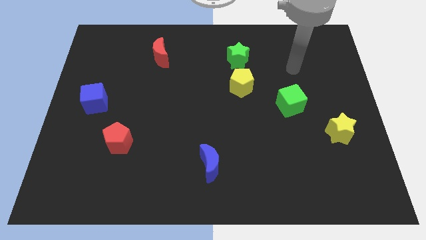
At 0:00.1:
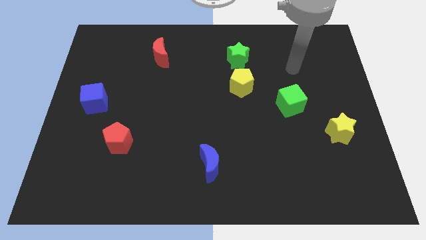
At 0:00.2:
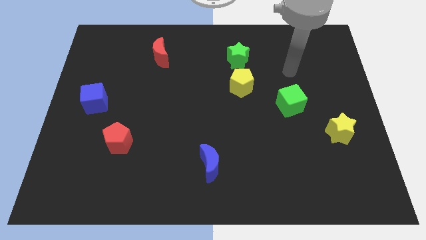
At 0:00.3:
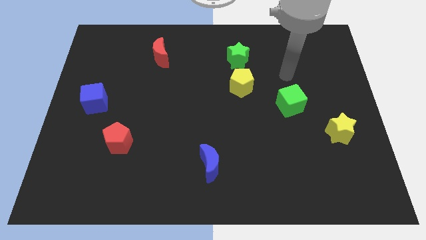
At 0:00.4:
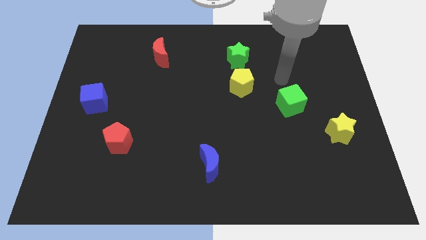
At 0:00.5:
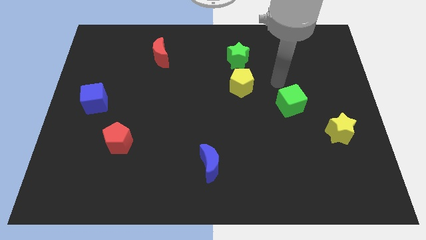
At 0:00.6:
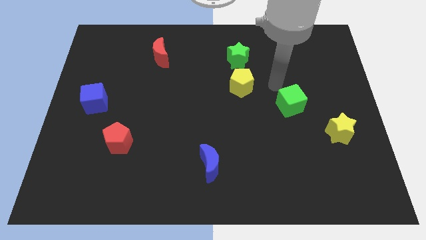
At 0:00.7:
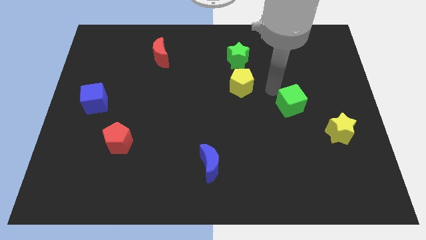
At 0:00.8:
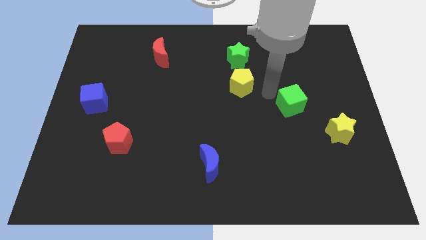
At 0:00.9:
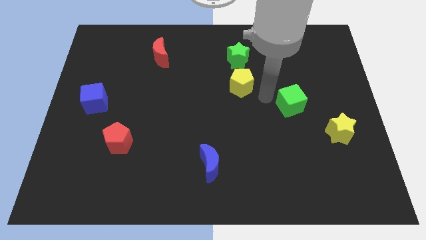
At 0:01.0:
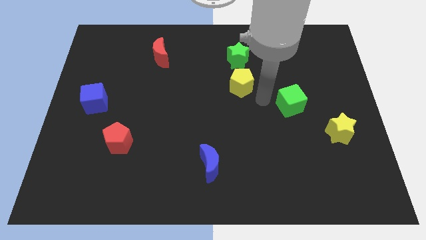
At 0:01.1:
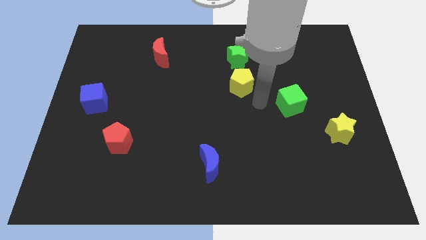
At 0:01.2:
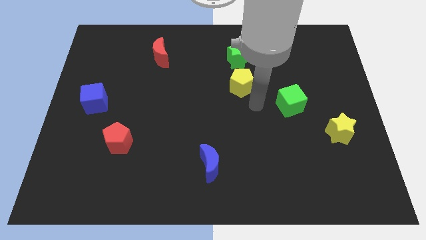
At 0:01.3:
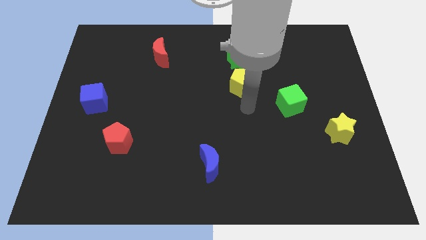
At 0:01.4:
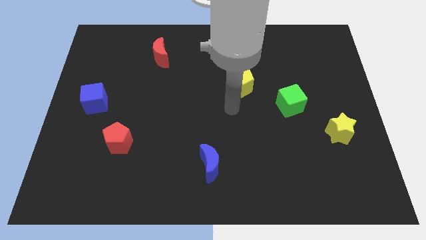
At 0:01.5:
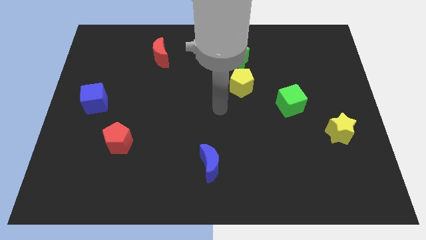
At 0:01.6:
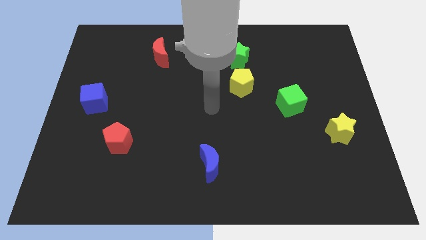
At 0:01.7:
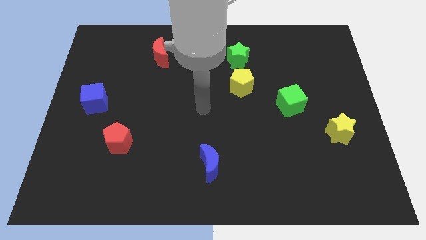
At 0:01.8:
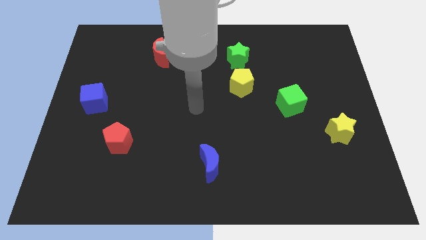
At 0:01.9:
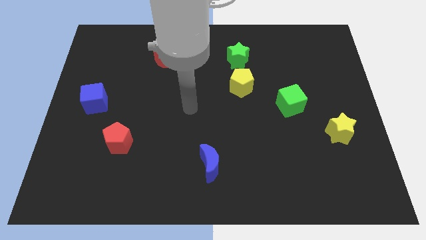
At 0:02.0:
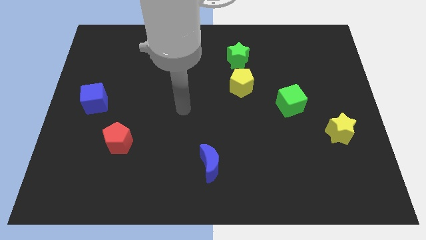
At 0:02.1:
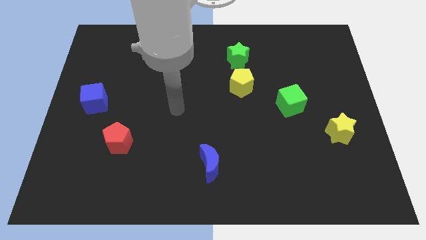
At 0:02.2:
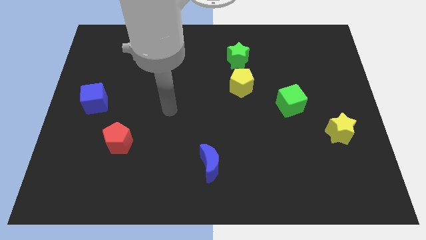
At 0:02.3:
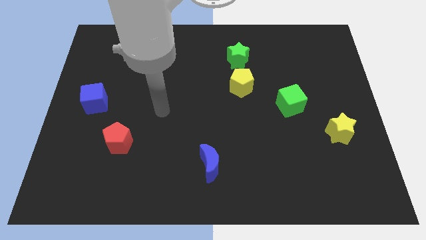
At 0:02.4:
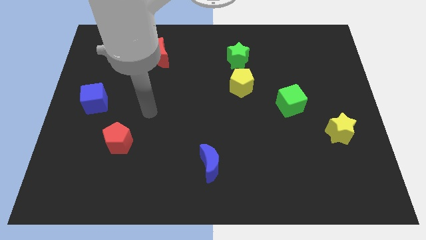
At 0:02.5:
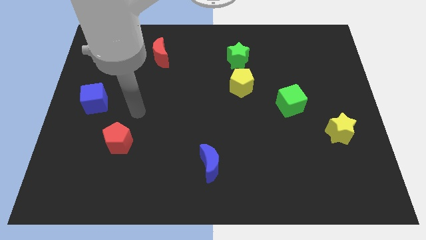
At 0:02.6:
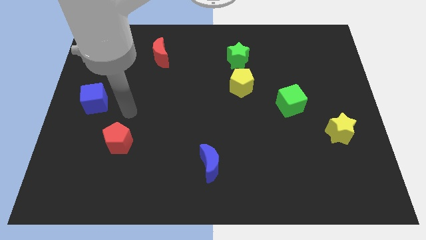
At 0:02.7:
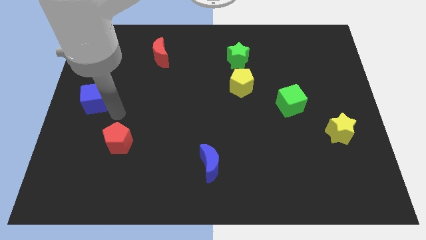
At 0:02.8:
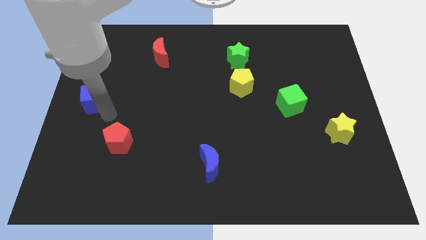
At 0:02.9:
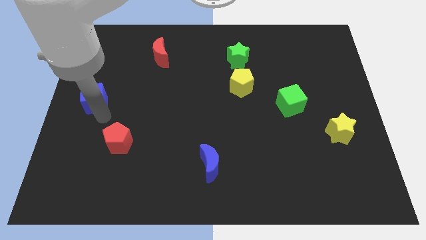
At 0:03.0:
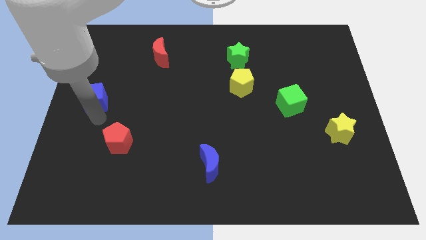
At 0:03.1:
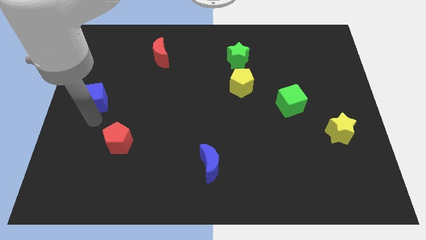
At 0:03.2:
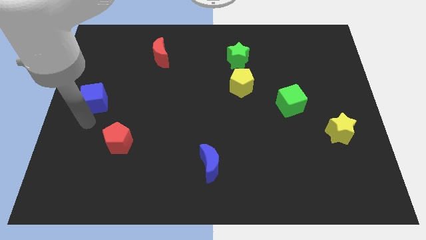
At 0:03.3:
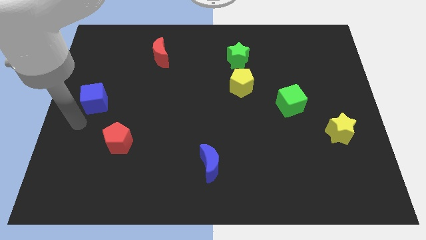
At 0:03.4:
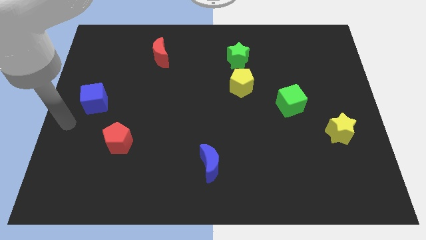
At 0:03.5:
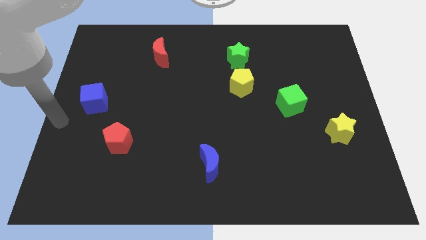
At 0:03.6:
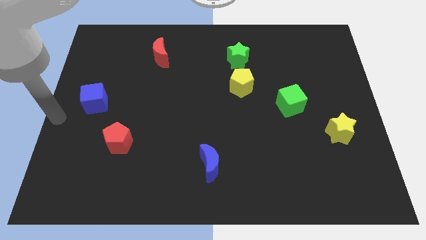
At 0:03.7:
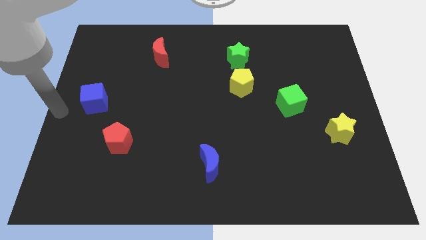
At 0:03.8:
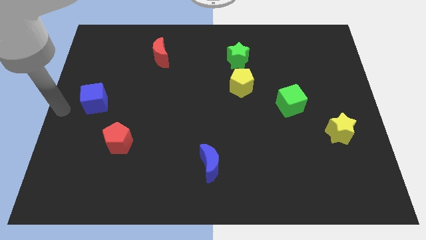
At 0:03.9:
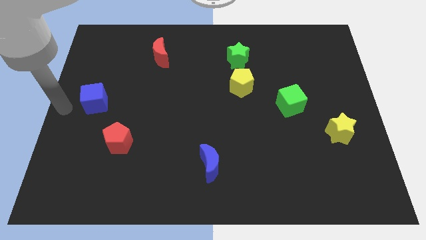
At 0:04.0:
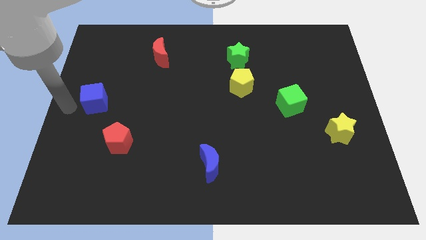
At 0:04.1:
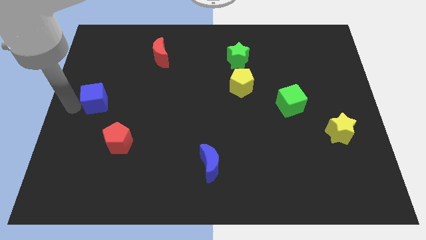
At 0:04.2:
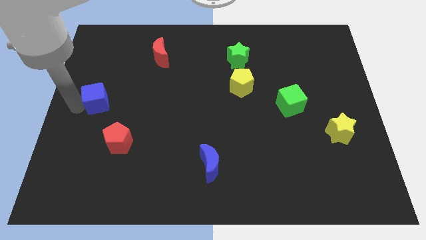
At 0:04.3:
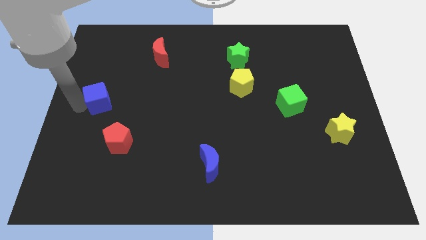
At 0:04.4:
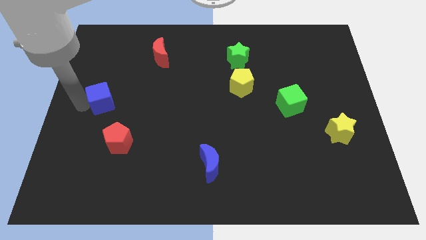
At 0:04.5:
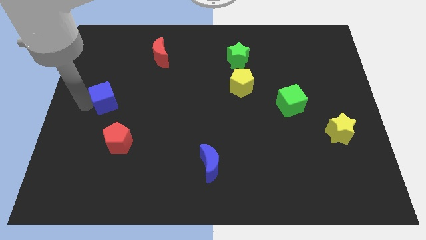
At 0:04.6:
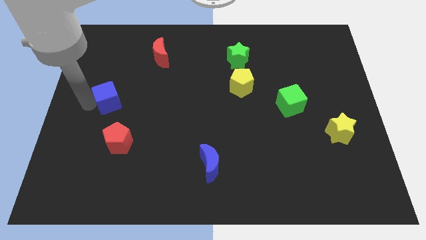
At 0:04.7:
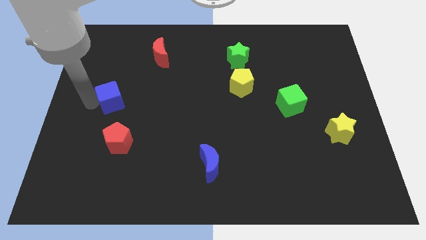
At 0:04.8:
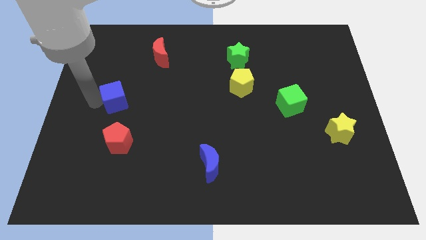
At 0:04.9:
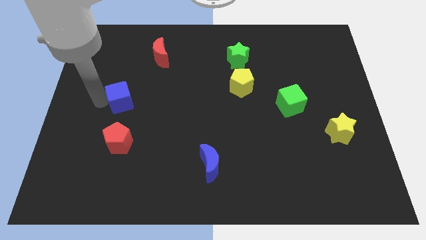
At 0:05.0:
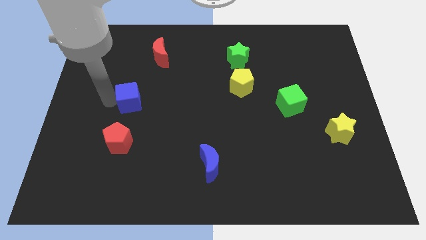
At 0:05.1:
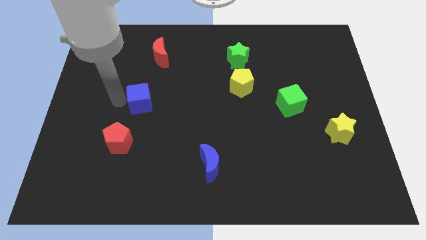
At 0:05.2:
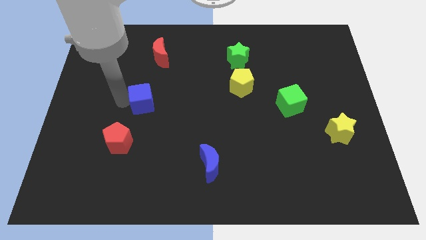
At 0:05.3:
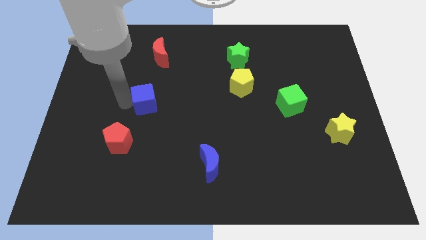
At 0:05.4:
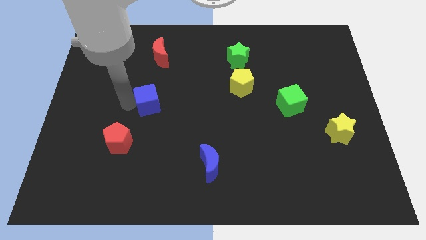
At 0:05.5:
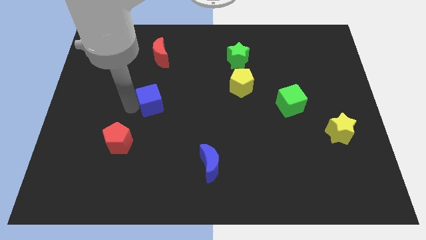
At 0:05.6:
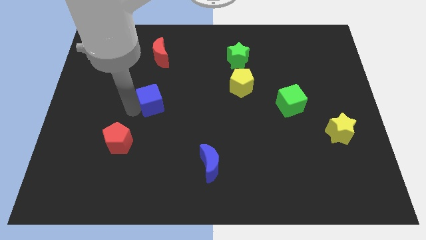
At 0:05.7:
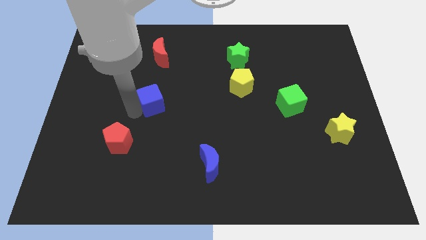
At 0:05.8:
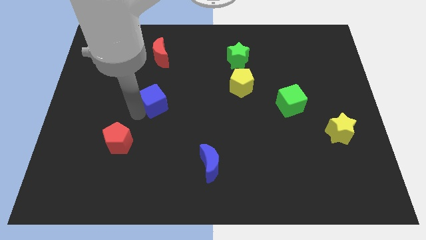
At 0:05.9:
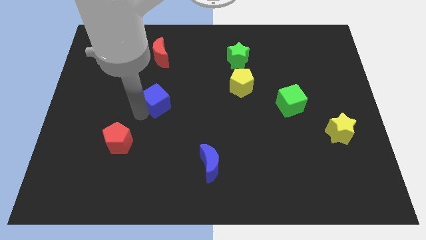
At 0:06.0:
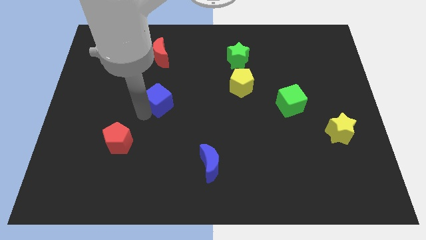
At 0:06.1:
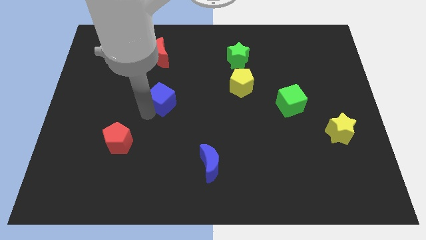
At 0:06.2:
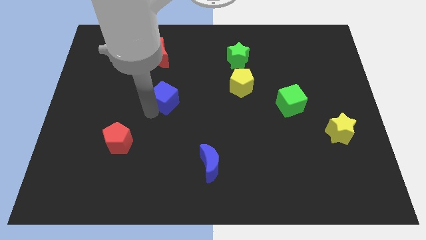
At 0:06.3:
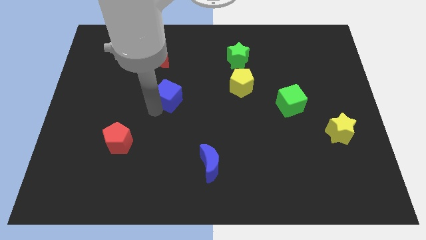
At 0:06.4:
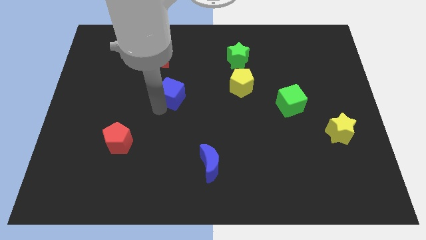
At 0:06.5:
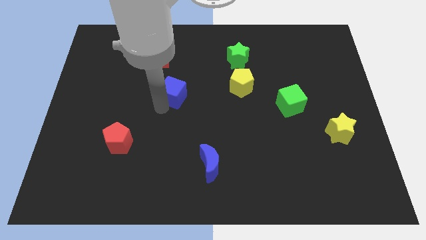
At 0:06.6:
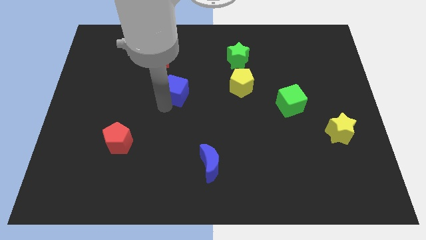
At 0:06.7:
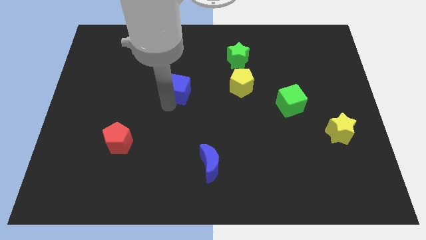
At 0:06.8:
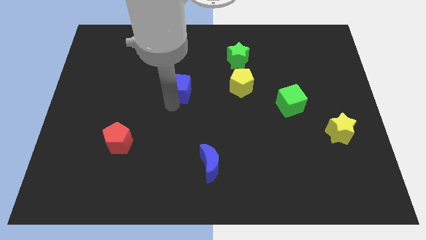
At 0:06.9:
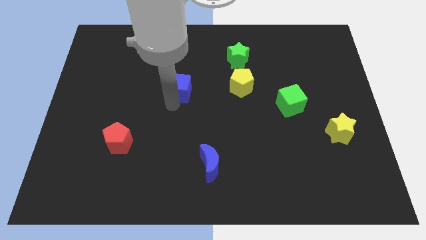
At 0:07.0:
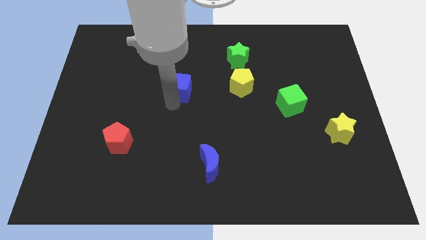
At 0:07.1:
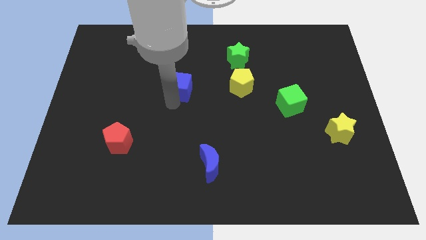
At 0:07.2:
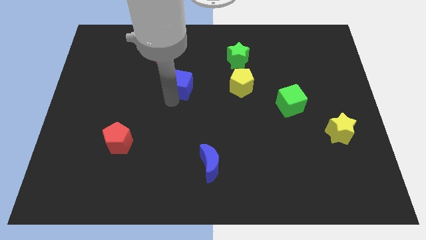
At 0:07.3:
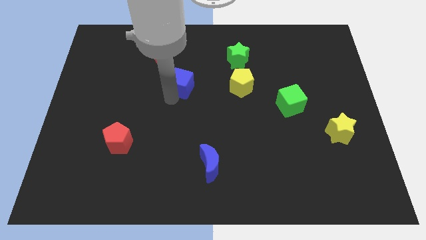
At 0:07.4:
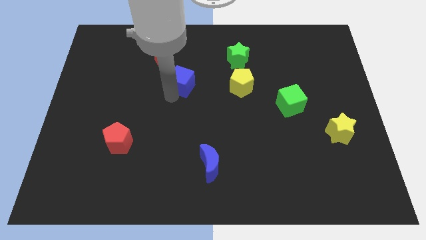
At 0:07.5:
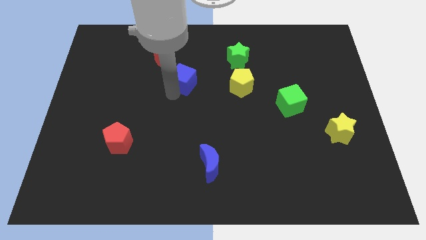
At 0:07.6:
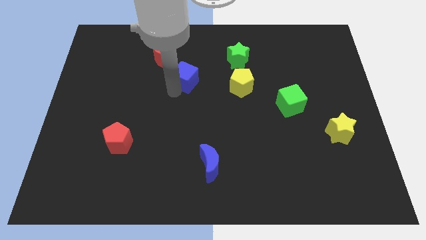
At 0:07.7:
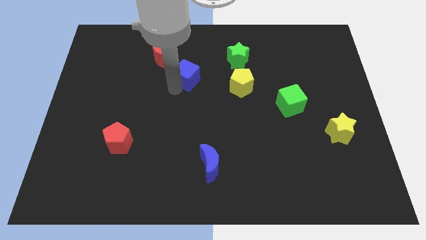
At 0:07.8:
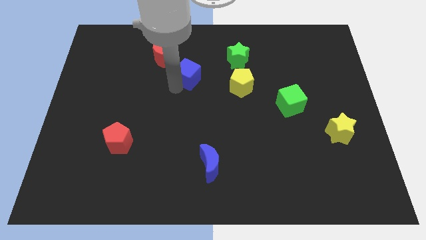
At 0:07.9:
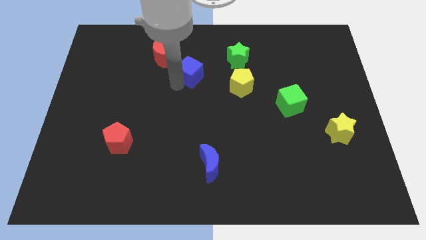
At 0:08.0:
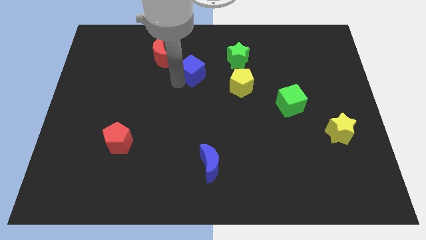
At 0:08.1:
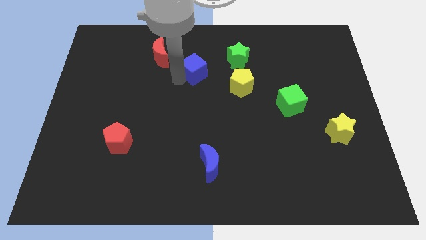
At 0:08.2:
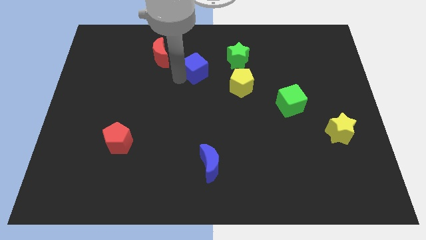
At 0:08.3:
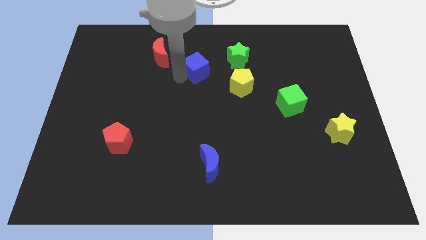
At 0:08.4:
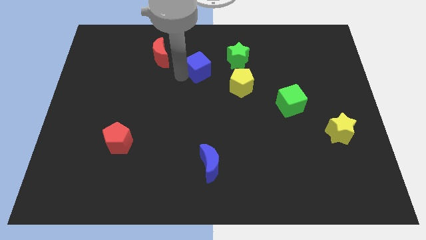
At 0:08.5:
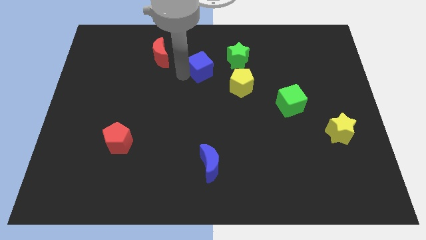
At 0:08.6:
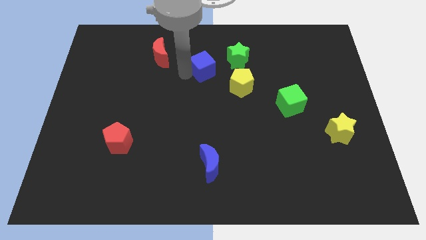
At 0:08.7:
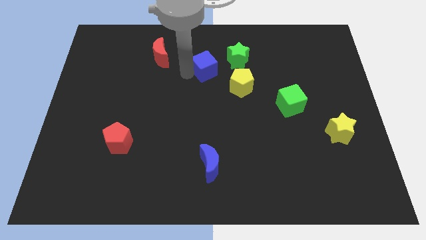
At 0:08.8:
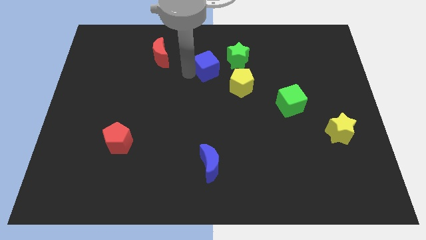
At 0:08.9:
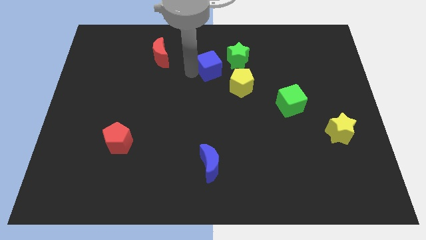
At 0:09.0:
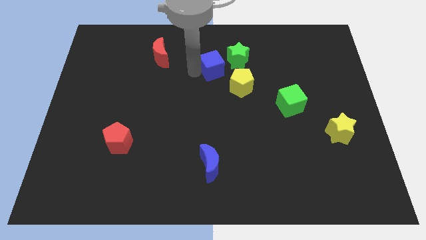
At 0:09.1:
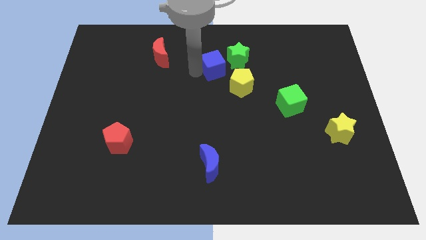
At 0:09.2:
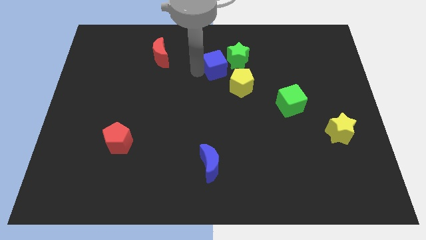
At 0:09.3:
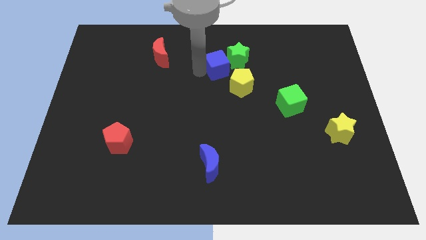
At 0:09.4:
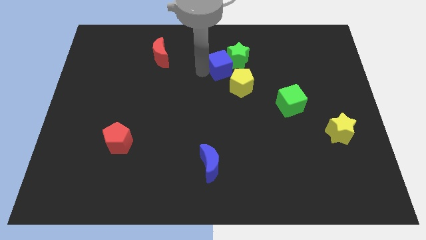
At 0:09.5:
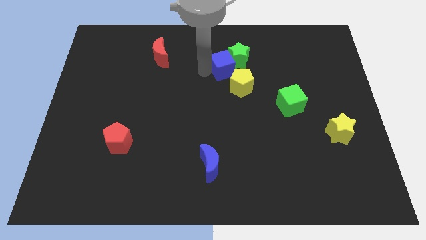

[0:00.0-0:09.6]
move the blue cube towards the green star
